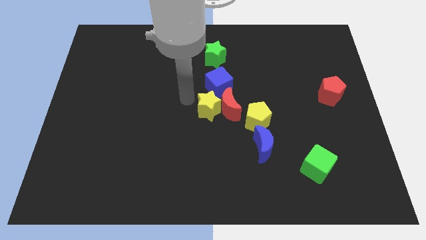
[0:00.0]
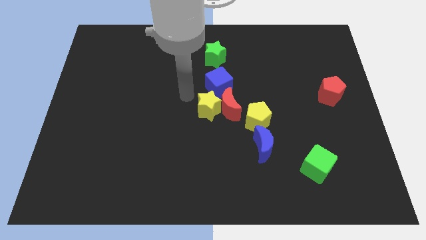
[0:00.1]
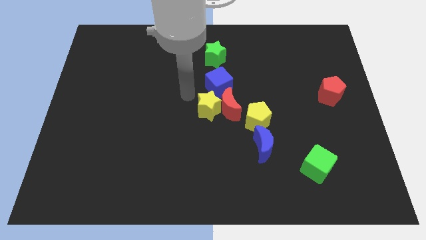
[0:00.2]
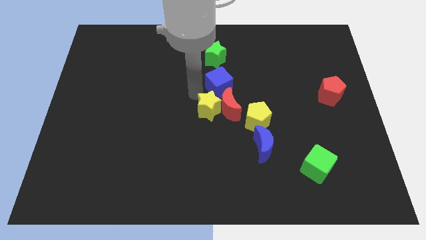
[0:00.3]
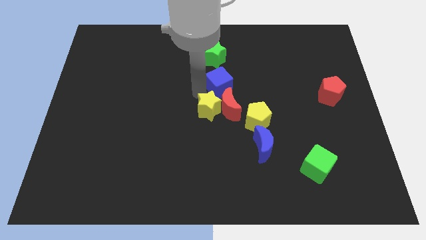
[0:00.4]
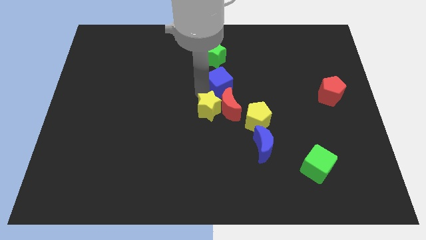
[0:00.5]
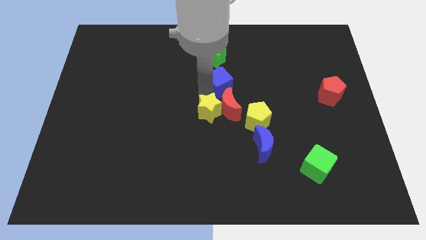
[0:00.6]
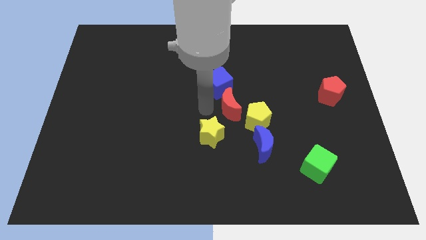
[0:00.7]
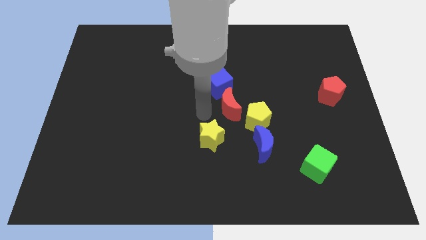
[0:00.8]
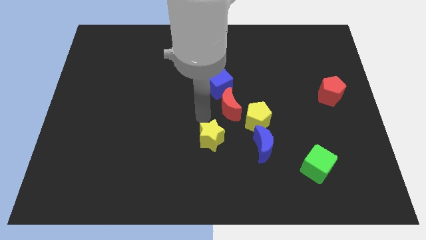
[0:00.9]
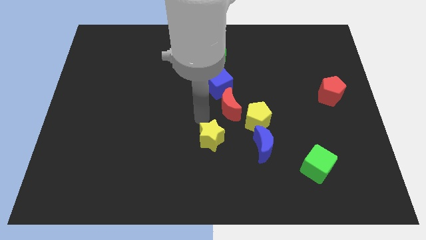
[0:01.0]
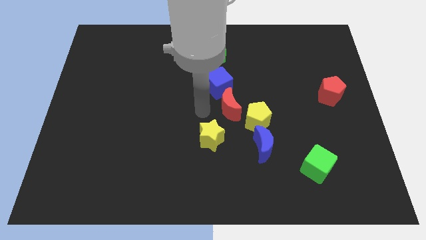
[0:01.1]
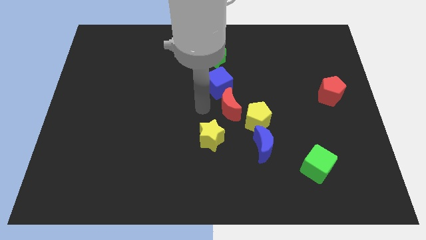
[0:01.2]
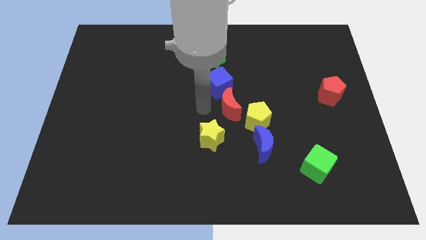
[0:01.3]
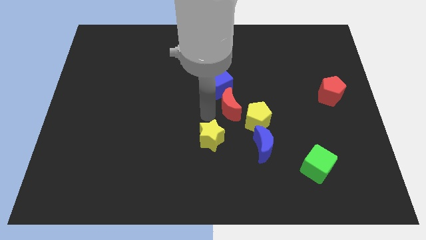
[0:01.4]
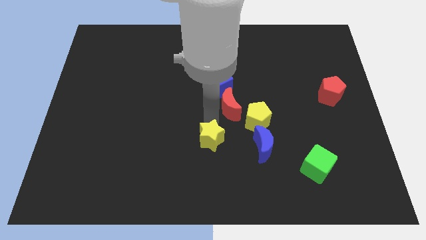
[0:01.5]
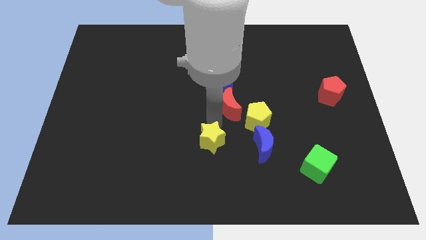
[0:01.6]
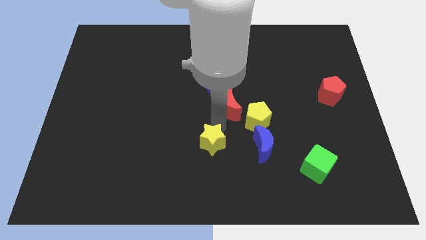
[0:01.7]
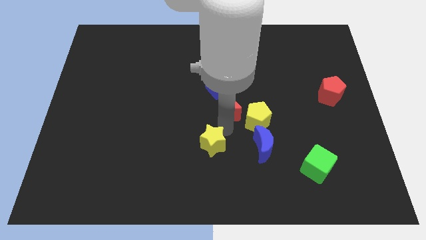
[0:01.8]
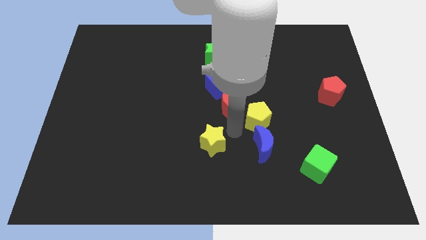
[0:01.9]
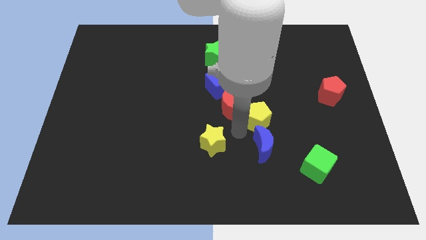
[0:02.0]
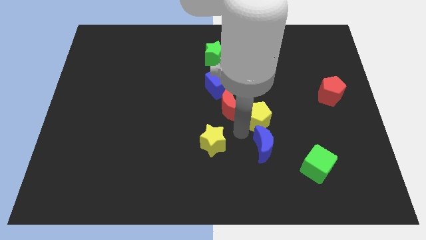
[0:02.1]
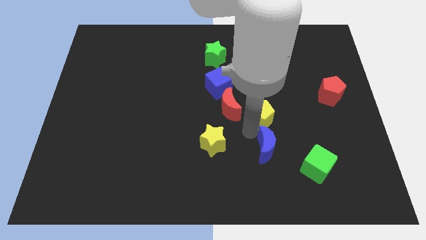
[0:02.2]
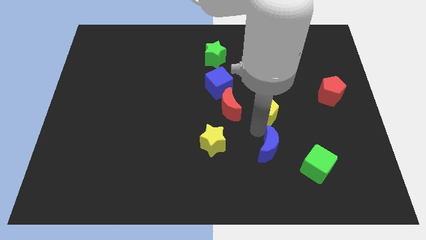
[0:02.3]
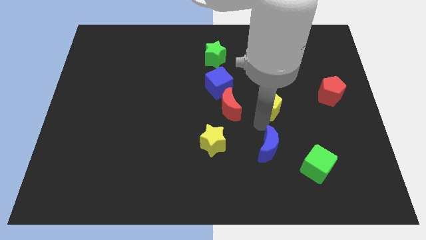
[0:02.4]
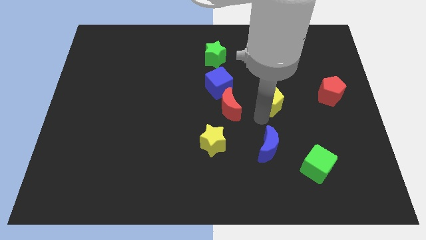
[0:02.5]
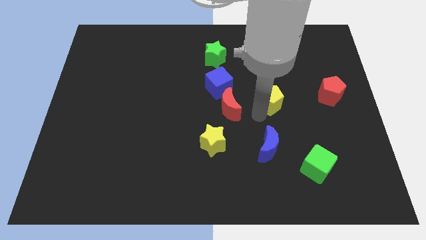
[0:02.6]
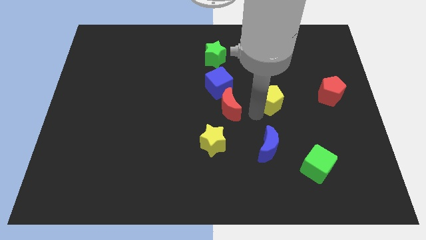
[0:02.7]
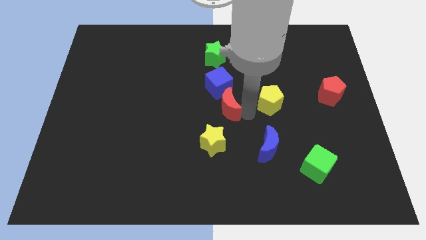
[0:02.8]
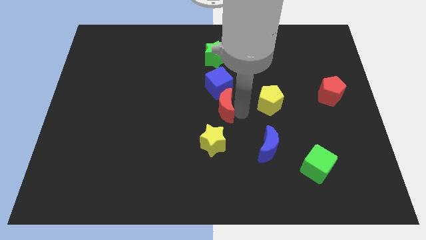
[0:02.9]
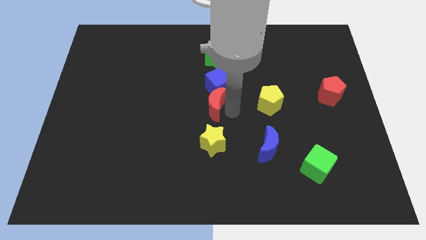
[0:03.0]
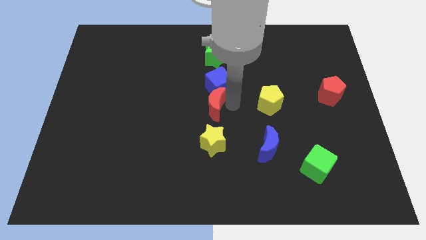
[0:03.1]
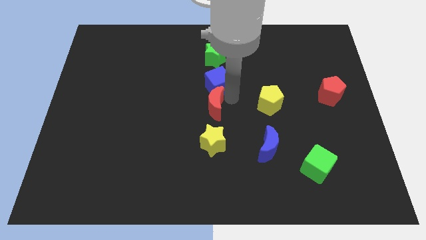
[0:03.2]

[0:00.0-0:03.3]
adjust the red moon to the bottom side of the blue cube

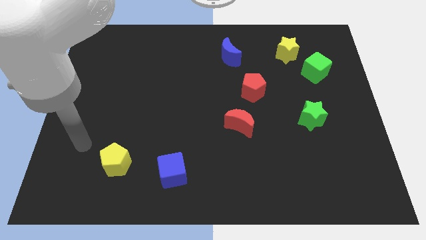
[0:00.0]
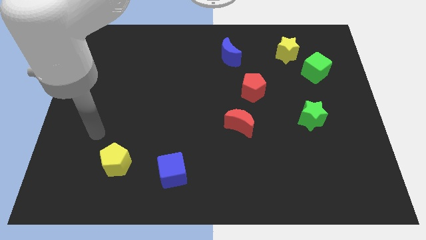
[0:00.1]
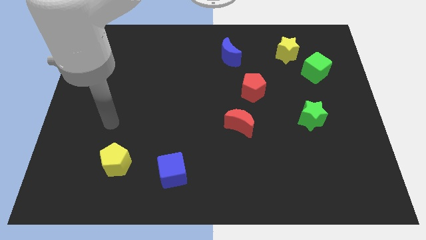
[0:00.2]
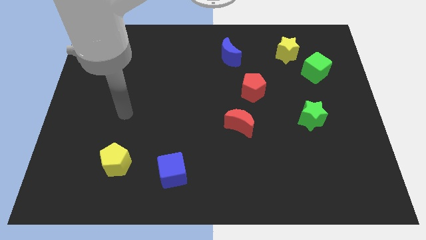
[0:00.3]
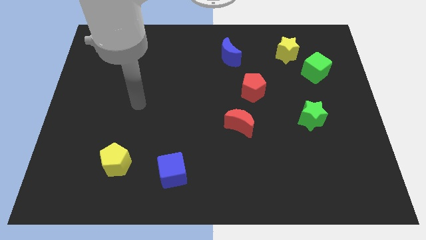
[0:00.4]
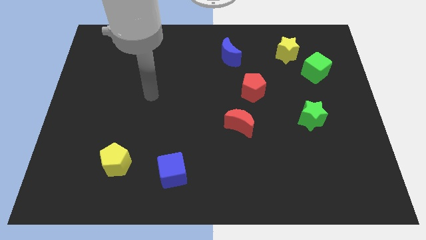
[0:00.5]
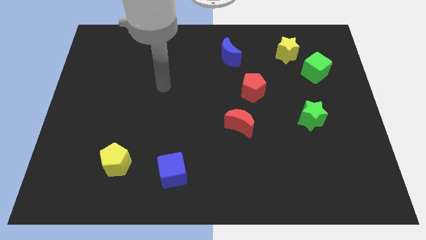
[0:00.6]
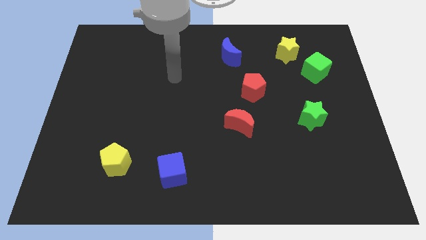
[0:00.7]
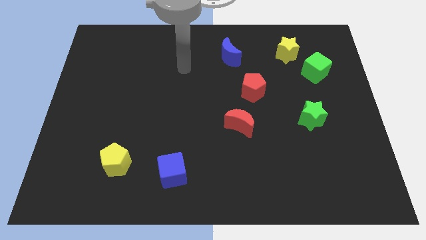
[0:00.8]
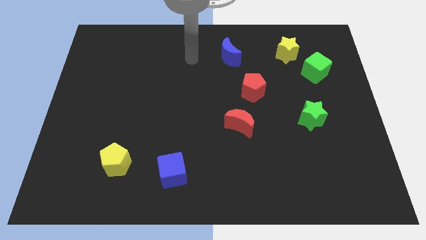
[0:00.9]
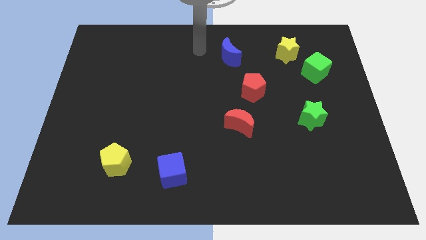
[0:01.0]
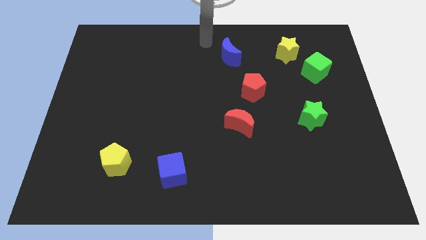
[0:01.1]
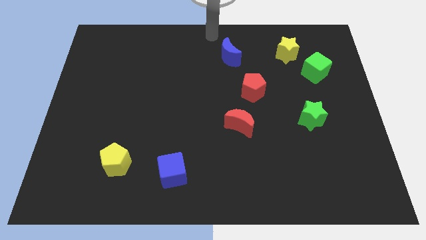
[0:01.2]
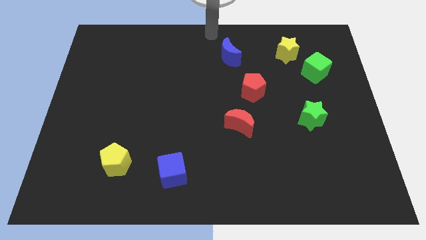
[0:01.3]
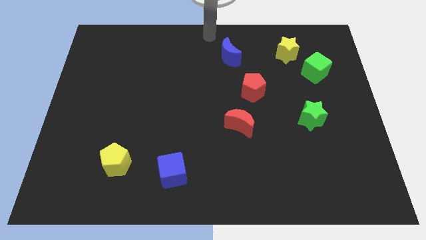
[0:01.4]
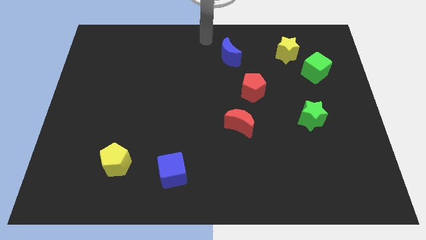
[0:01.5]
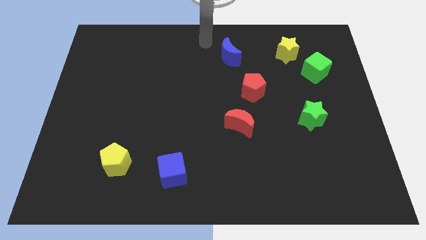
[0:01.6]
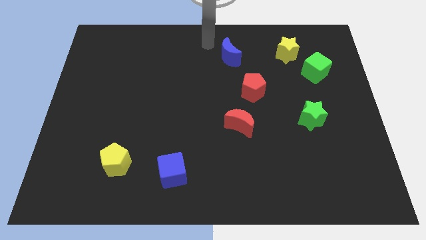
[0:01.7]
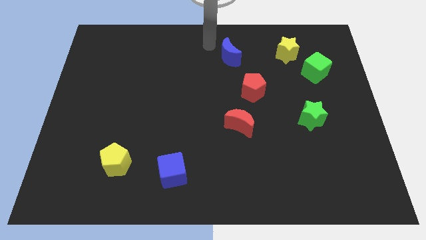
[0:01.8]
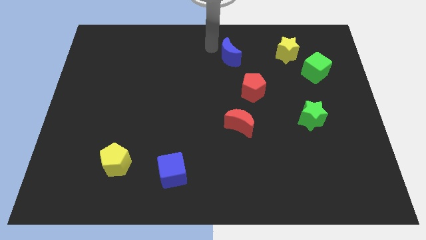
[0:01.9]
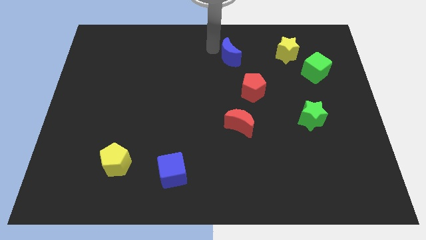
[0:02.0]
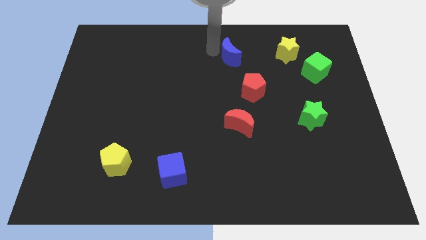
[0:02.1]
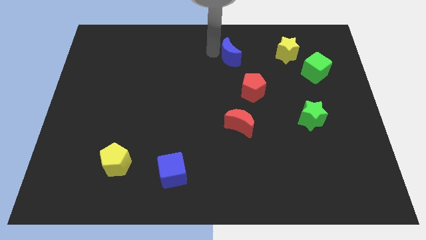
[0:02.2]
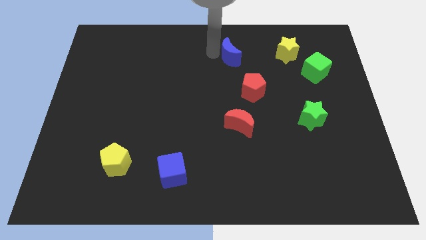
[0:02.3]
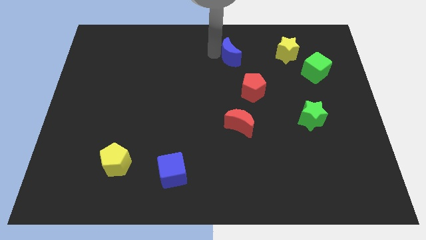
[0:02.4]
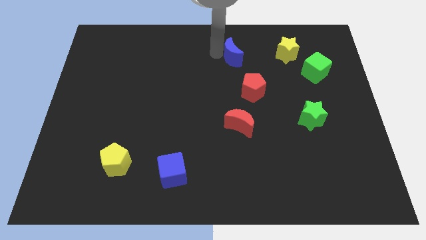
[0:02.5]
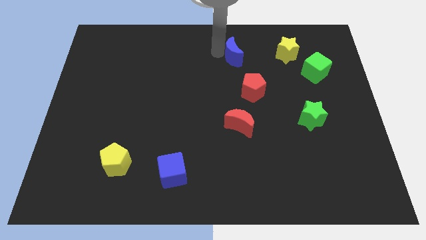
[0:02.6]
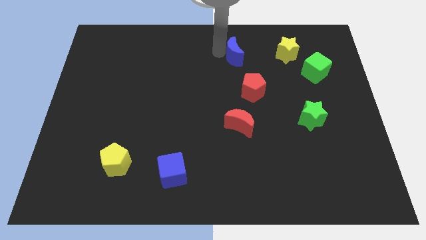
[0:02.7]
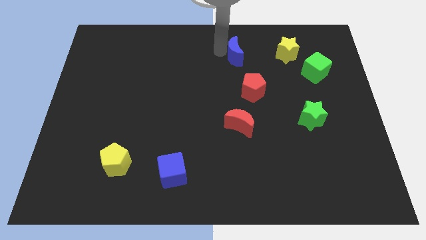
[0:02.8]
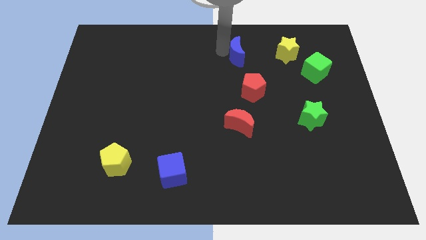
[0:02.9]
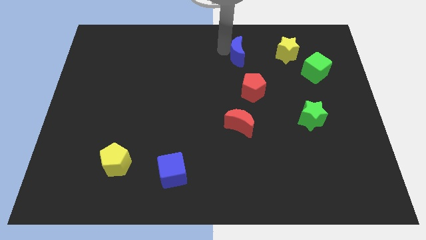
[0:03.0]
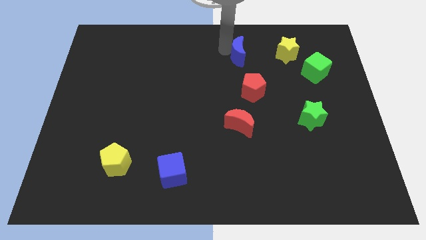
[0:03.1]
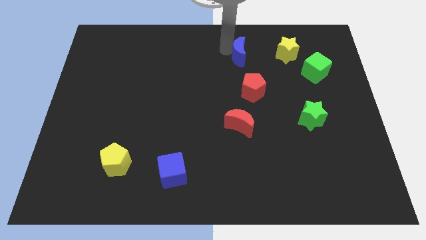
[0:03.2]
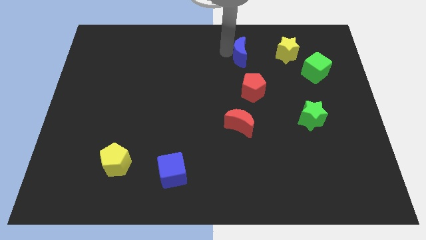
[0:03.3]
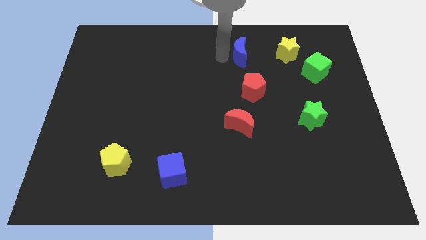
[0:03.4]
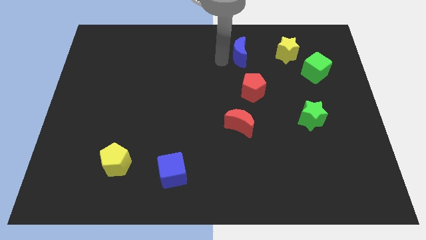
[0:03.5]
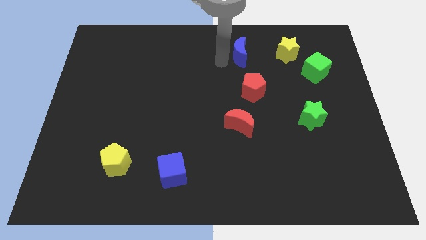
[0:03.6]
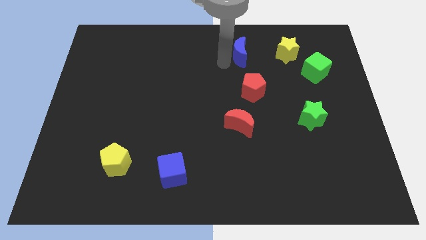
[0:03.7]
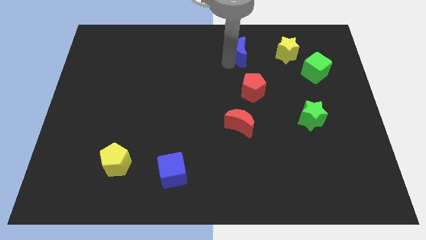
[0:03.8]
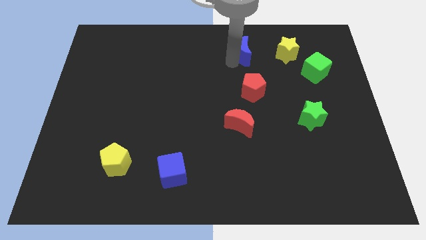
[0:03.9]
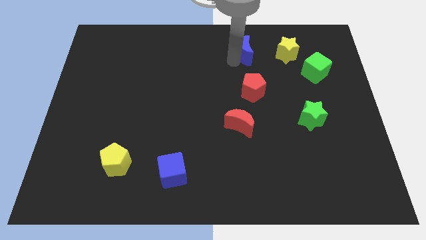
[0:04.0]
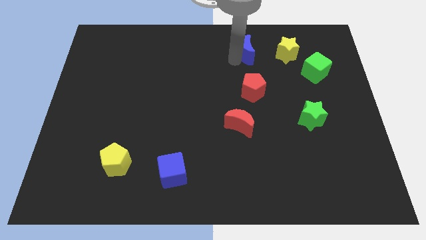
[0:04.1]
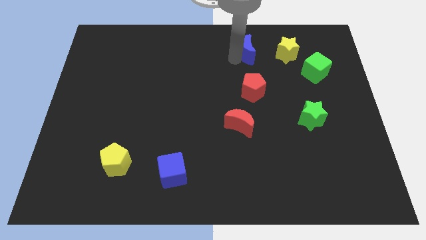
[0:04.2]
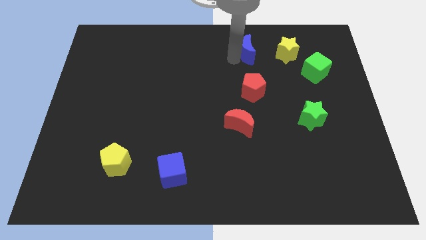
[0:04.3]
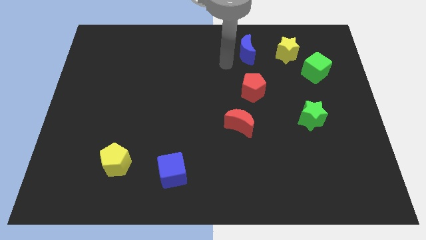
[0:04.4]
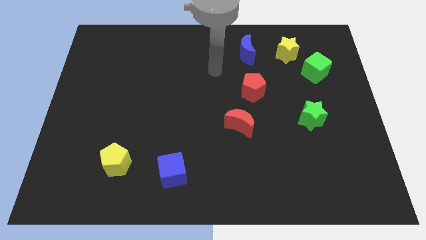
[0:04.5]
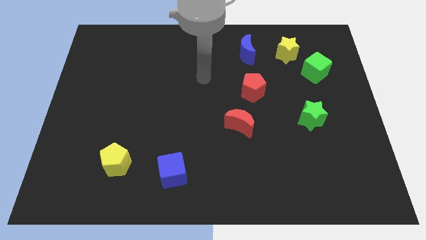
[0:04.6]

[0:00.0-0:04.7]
slide the blue crescent vertically above the red pentagon

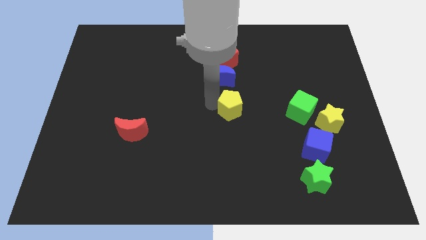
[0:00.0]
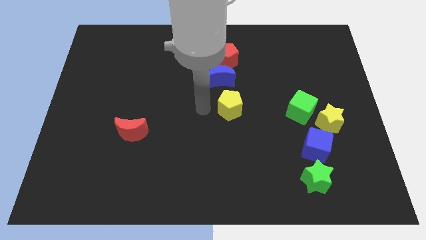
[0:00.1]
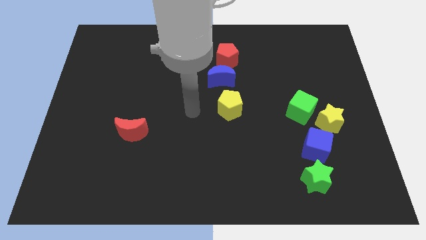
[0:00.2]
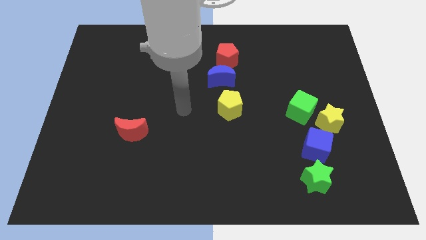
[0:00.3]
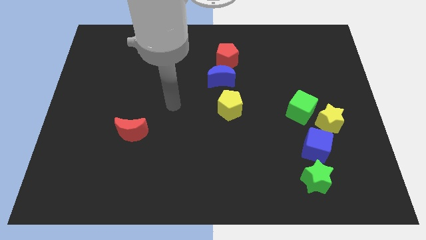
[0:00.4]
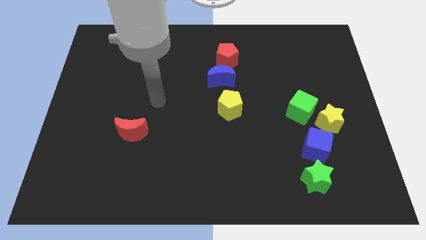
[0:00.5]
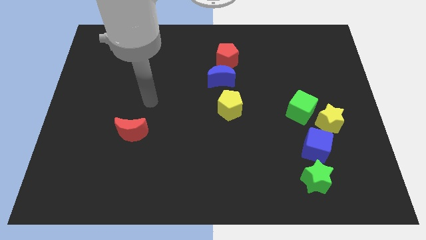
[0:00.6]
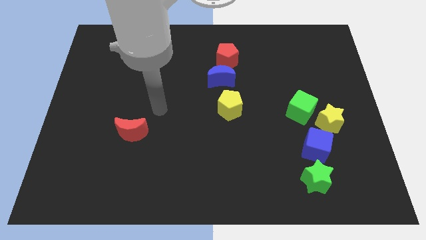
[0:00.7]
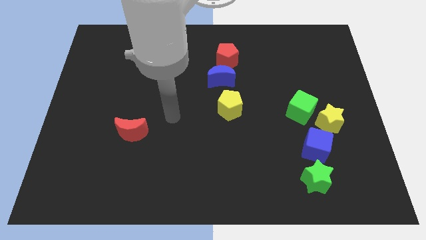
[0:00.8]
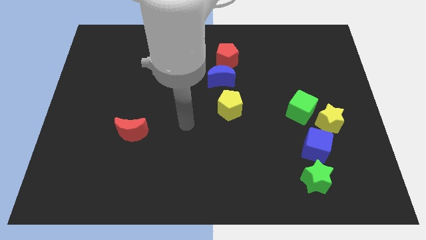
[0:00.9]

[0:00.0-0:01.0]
place your arm in between the red crescent and yellow pentagon
